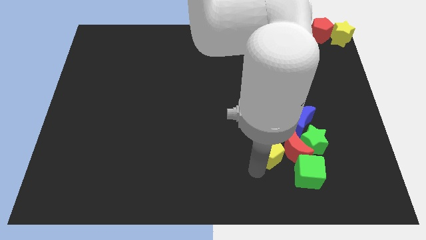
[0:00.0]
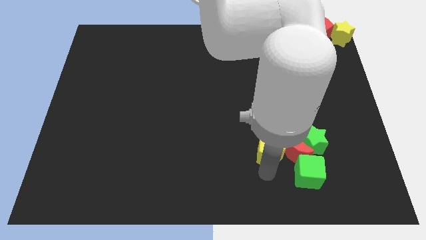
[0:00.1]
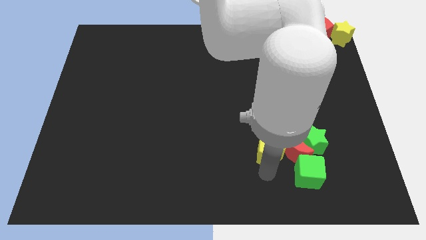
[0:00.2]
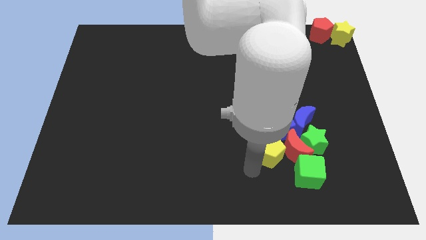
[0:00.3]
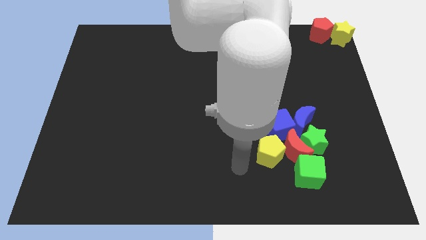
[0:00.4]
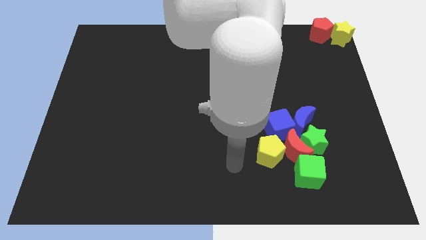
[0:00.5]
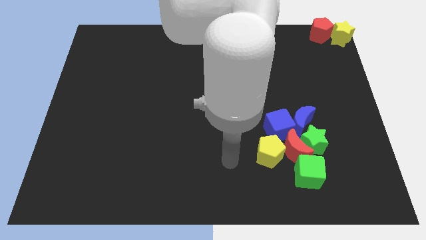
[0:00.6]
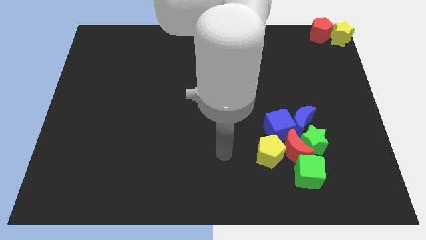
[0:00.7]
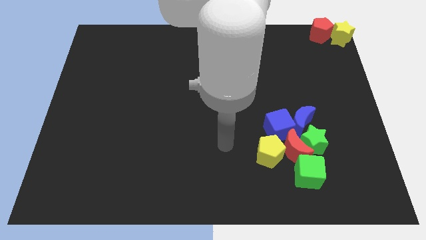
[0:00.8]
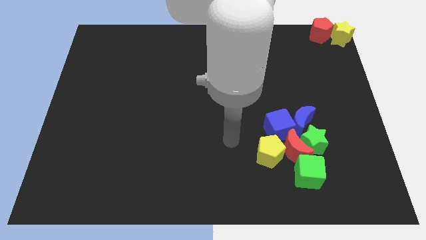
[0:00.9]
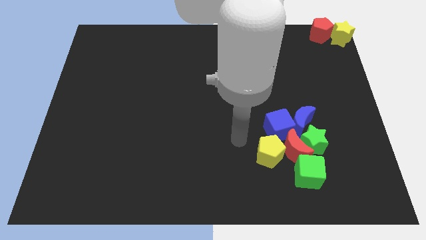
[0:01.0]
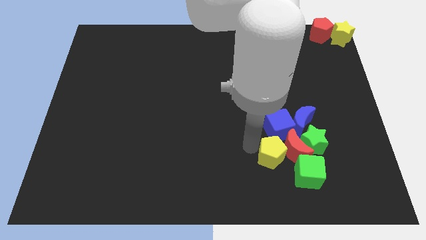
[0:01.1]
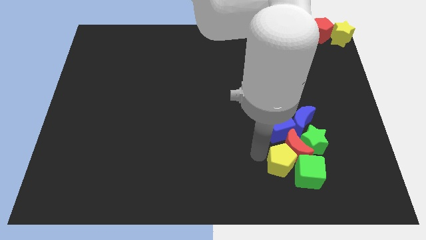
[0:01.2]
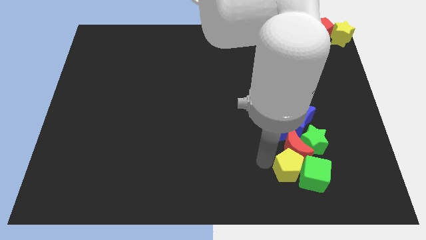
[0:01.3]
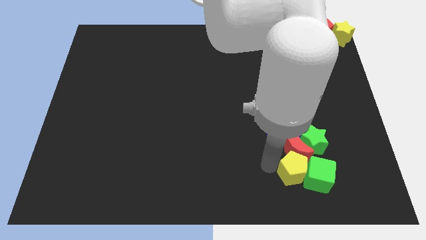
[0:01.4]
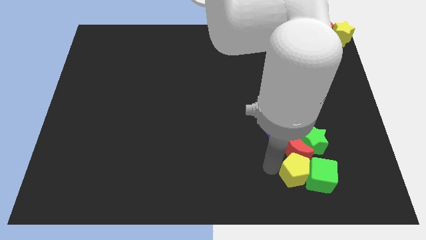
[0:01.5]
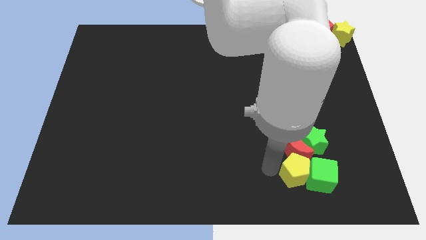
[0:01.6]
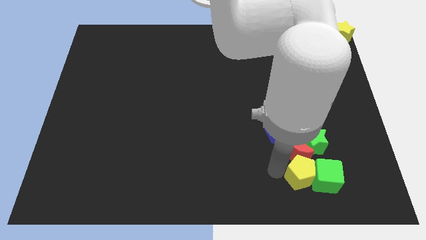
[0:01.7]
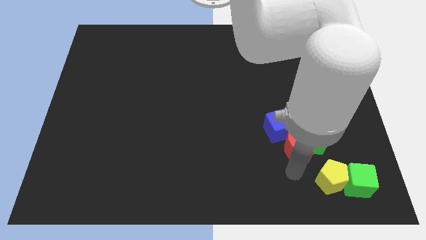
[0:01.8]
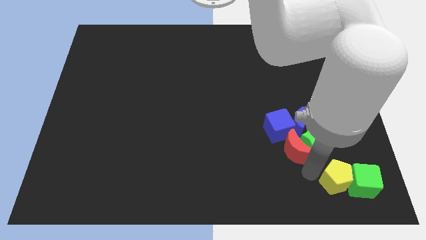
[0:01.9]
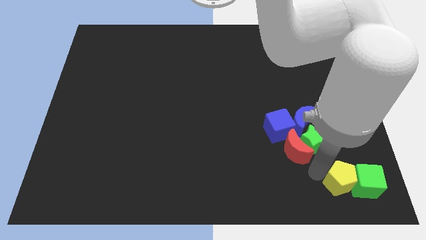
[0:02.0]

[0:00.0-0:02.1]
push the yellow pentagon into the green cube

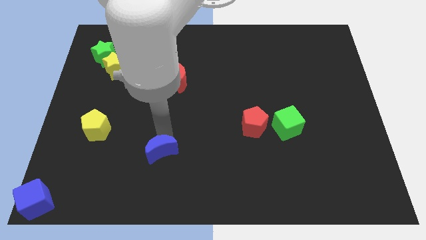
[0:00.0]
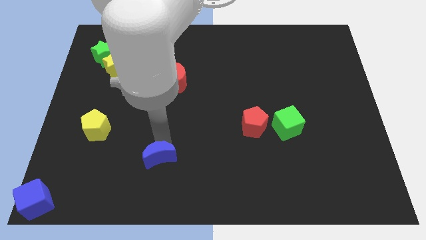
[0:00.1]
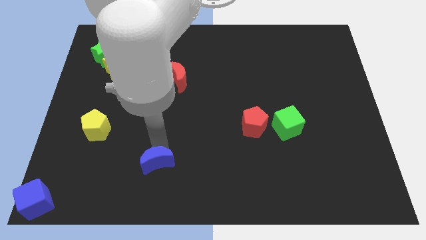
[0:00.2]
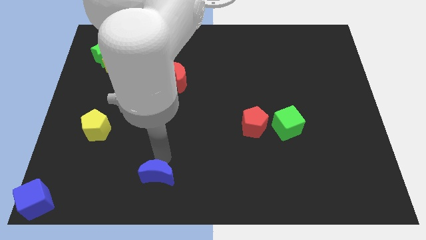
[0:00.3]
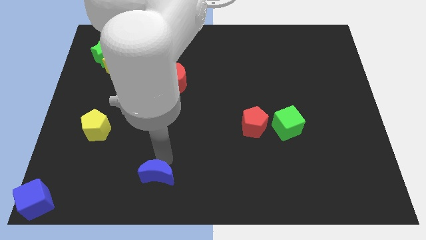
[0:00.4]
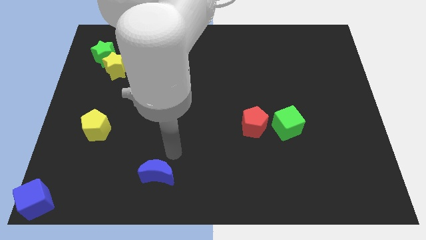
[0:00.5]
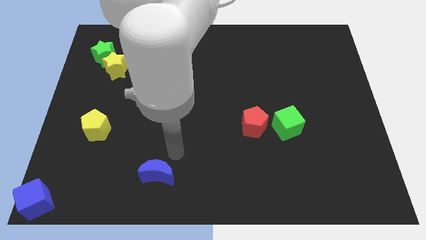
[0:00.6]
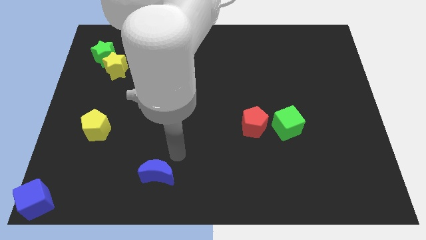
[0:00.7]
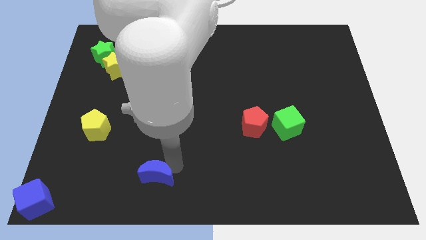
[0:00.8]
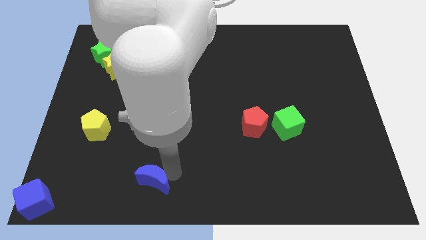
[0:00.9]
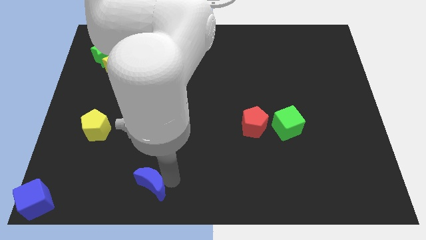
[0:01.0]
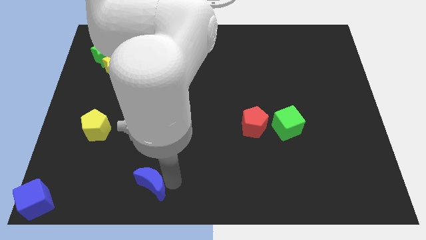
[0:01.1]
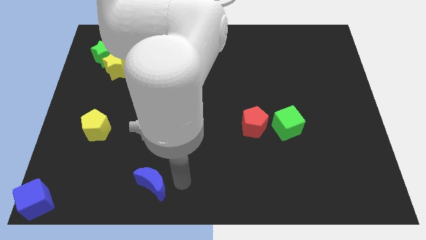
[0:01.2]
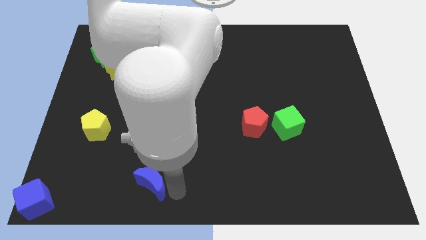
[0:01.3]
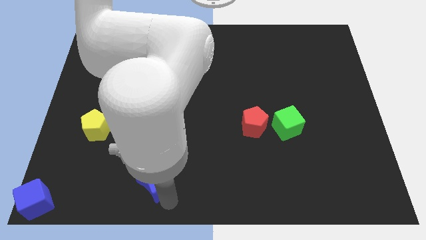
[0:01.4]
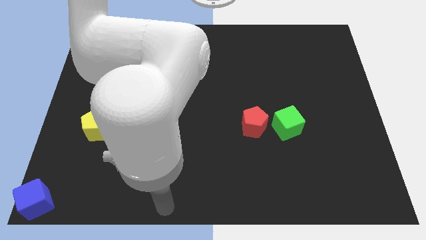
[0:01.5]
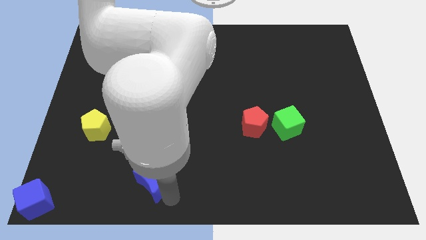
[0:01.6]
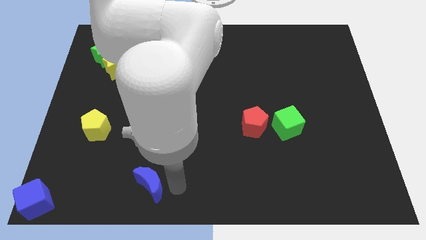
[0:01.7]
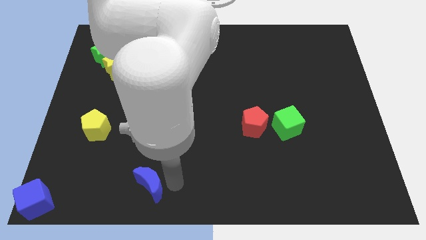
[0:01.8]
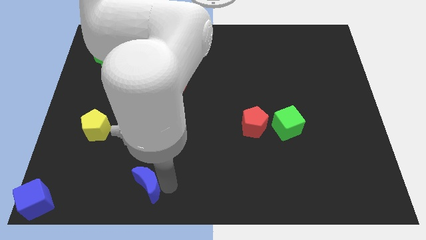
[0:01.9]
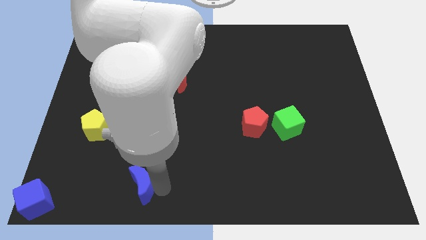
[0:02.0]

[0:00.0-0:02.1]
drag the blue moon slightly downwards

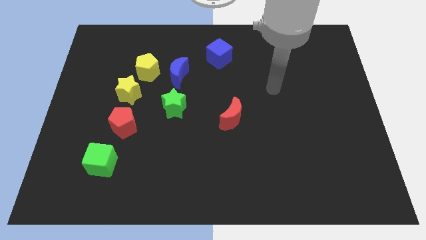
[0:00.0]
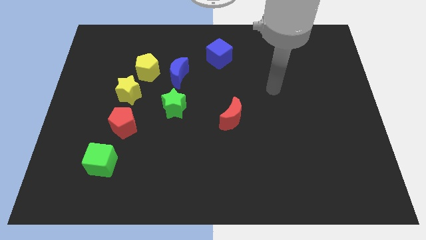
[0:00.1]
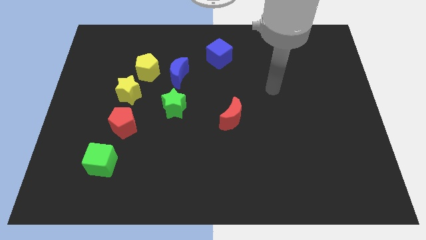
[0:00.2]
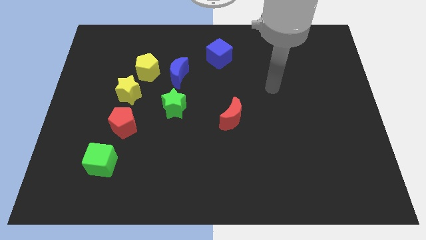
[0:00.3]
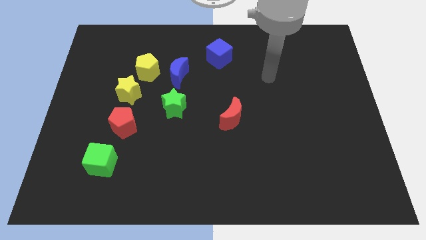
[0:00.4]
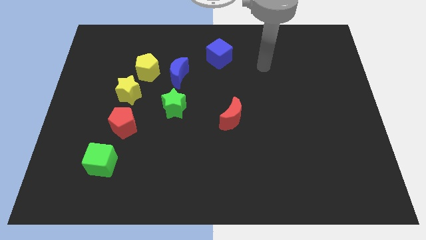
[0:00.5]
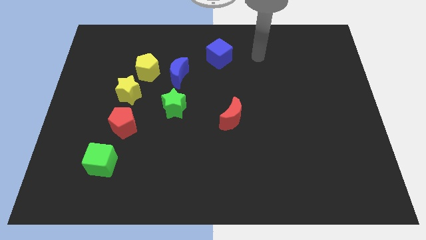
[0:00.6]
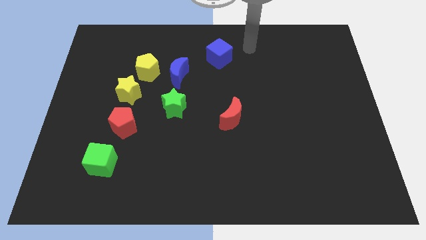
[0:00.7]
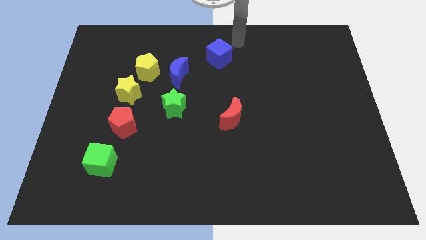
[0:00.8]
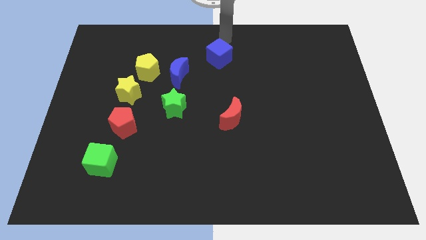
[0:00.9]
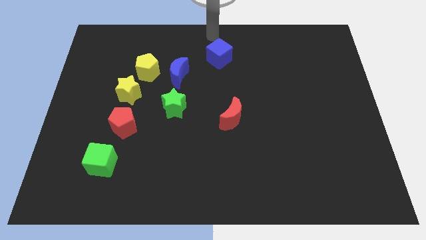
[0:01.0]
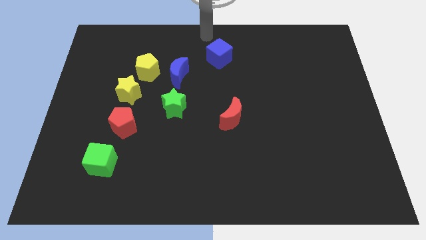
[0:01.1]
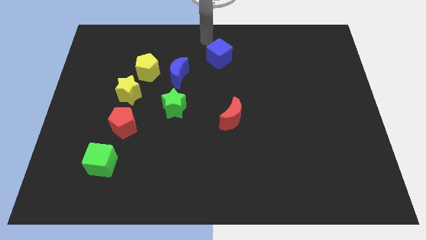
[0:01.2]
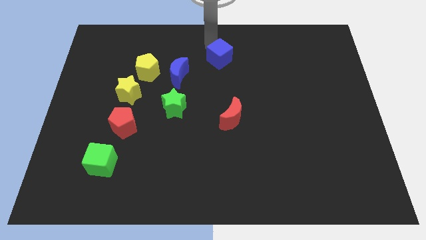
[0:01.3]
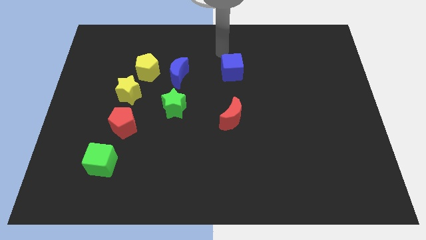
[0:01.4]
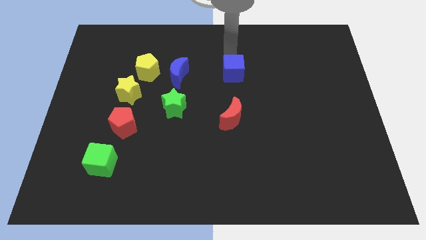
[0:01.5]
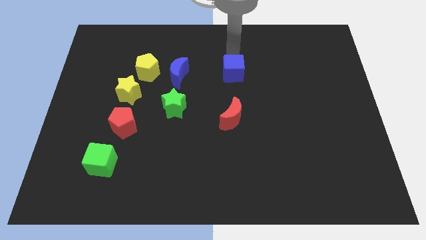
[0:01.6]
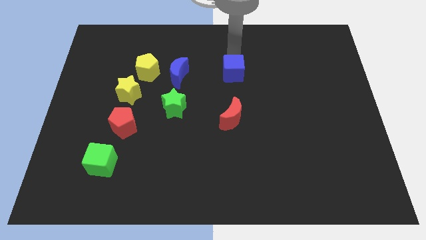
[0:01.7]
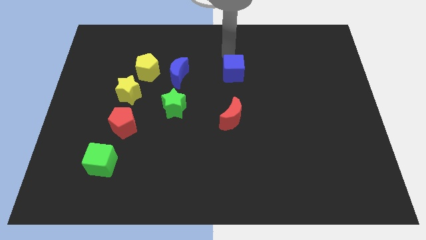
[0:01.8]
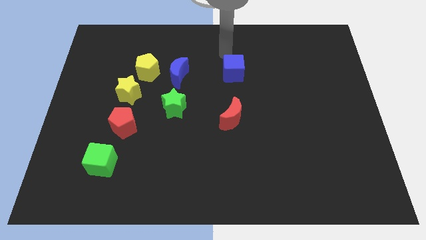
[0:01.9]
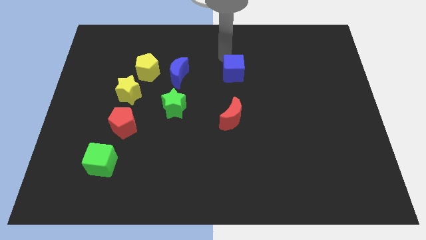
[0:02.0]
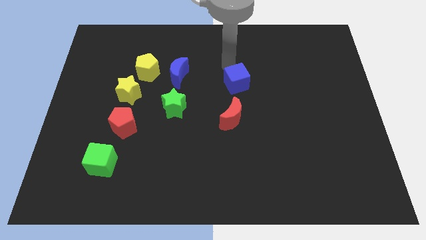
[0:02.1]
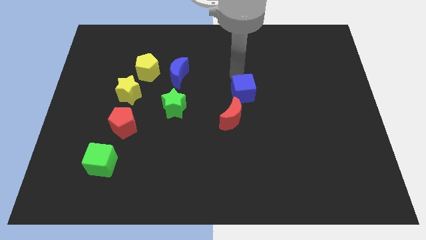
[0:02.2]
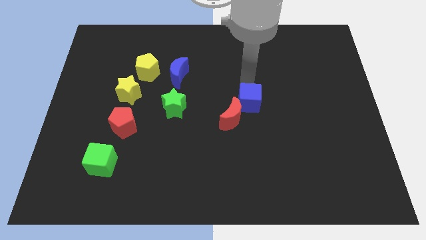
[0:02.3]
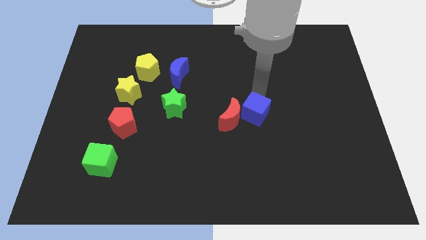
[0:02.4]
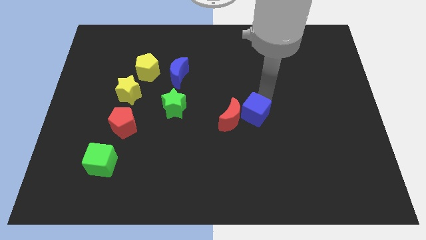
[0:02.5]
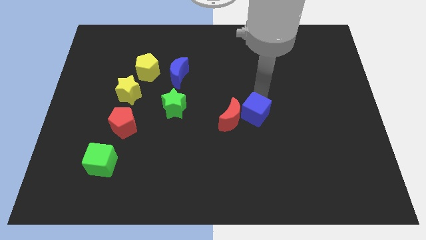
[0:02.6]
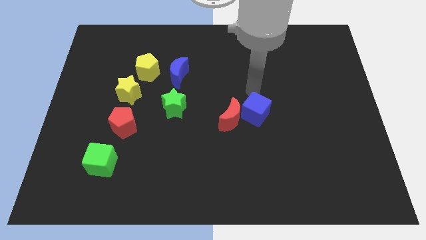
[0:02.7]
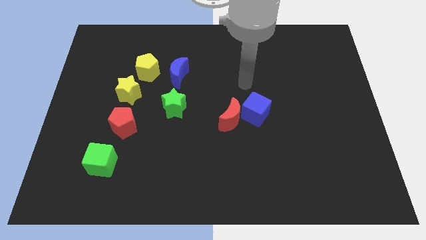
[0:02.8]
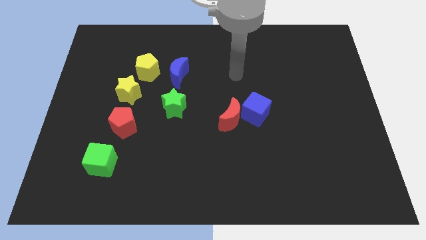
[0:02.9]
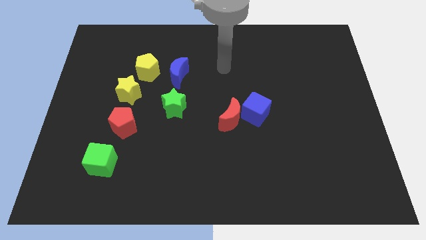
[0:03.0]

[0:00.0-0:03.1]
push the blue cube into the top right side of the red moon

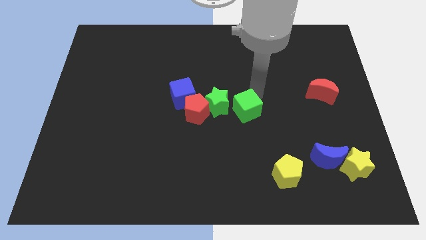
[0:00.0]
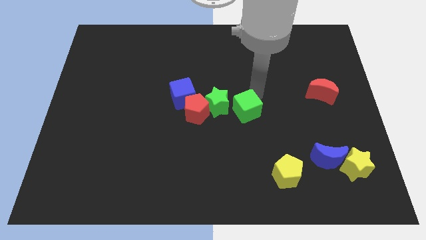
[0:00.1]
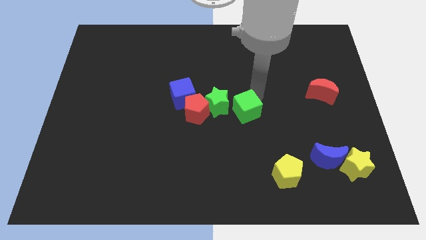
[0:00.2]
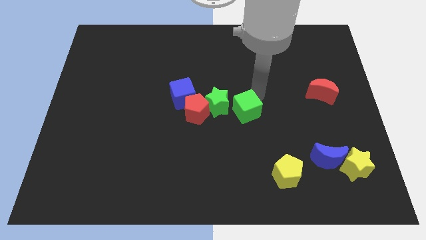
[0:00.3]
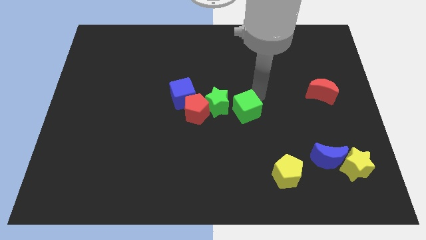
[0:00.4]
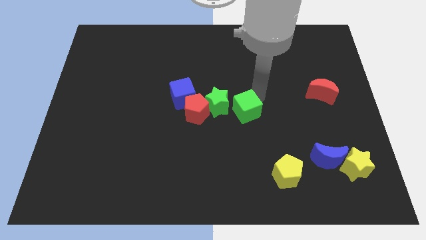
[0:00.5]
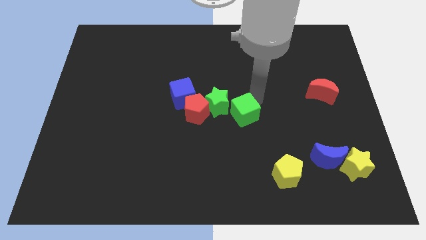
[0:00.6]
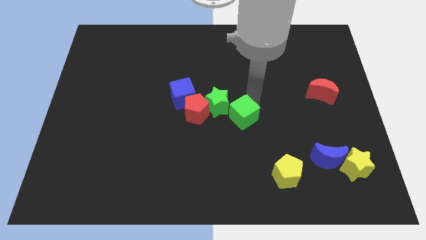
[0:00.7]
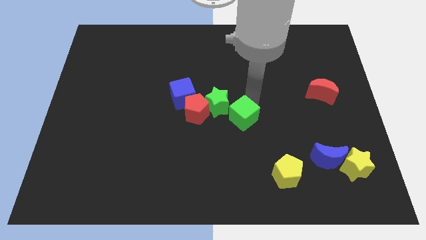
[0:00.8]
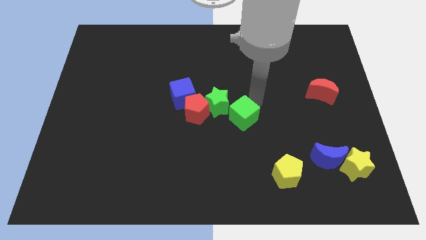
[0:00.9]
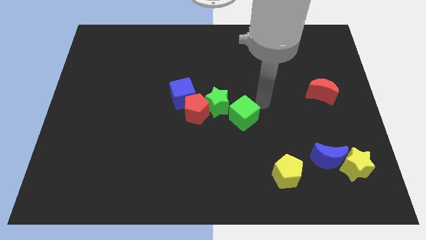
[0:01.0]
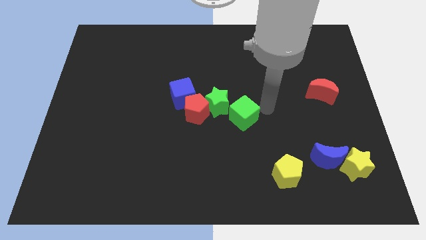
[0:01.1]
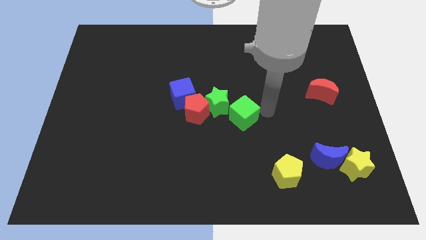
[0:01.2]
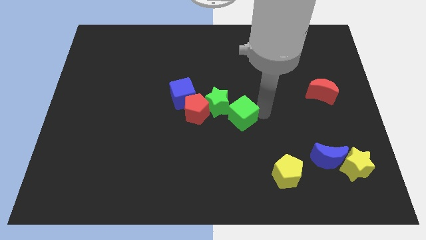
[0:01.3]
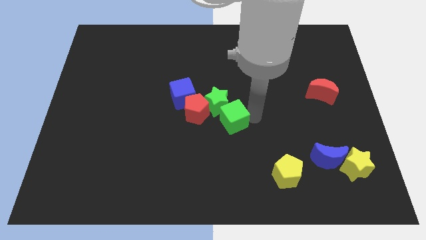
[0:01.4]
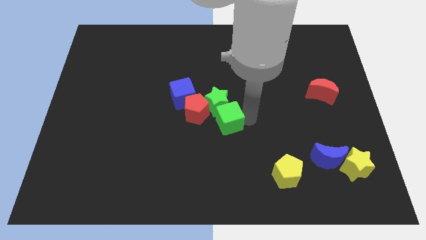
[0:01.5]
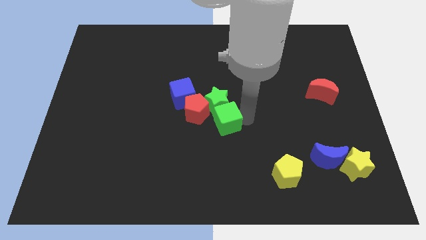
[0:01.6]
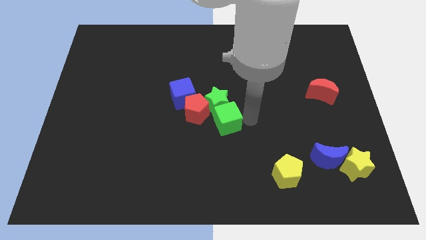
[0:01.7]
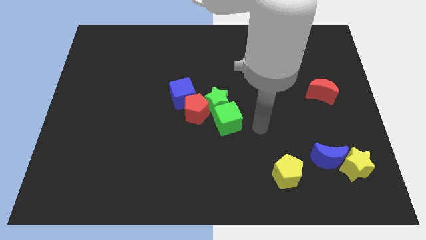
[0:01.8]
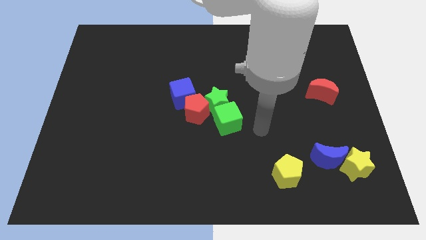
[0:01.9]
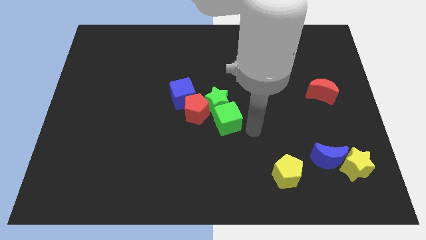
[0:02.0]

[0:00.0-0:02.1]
place the green cube below the green star
